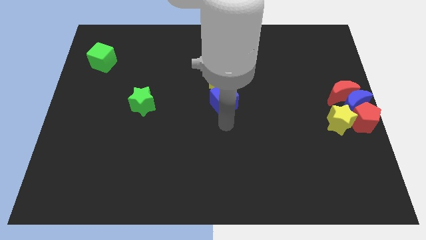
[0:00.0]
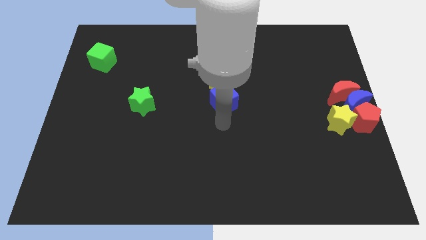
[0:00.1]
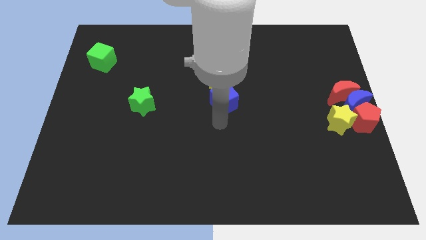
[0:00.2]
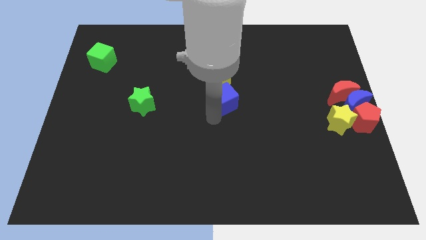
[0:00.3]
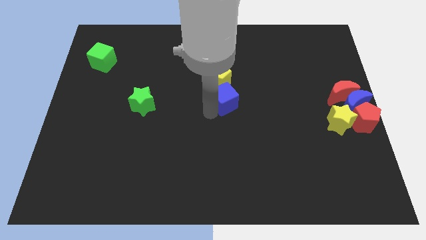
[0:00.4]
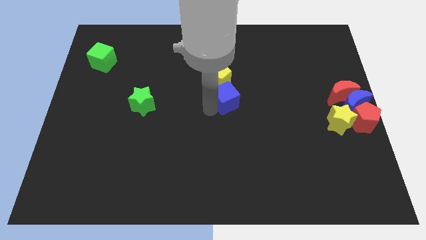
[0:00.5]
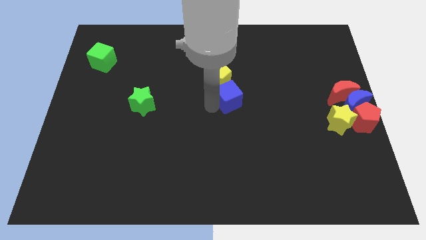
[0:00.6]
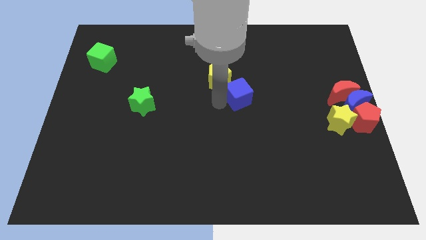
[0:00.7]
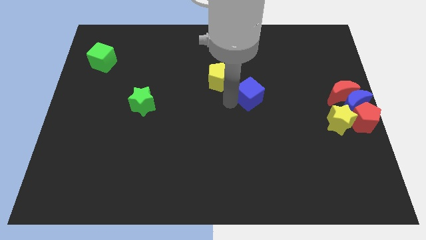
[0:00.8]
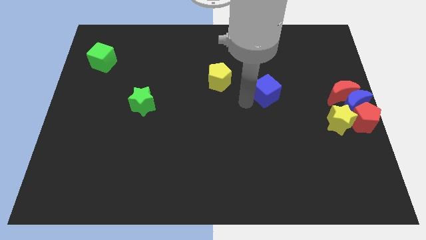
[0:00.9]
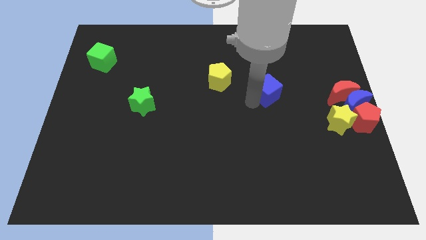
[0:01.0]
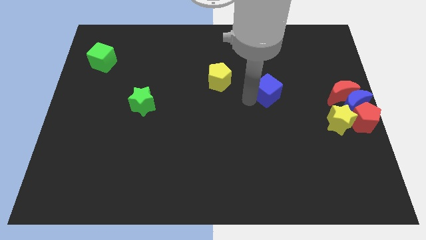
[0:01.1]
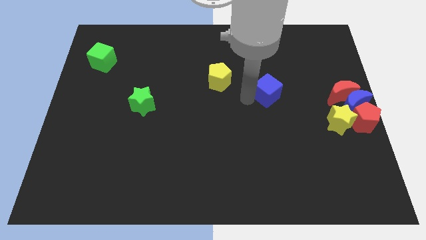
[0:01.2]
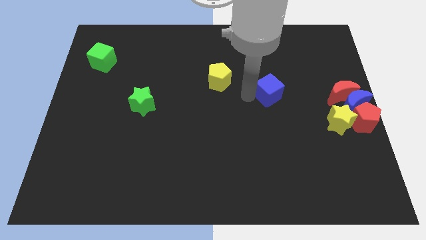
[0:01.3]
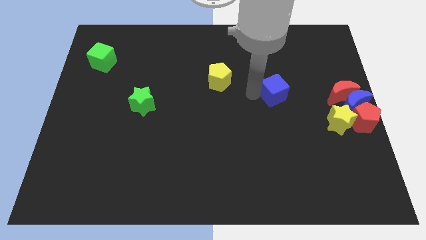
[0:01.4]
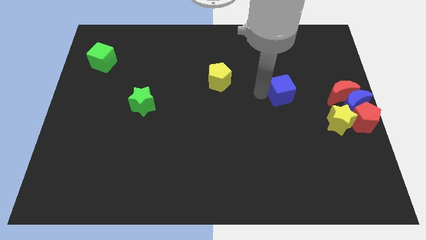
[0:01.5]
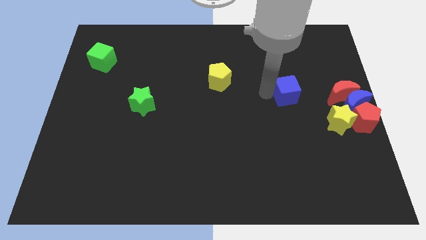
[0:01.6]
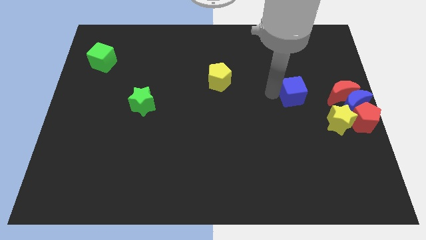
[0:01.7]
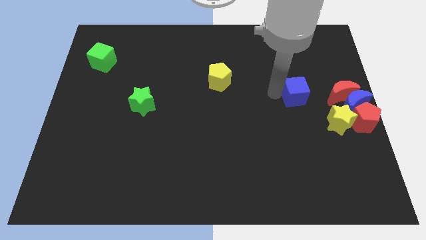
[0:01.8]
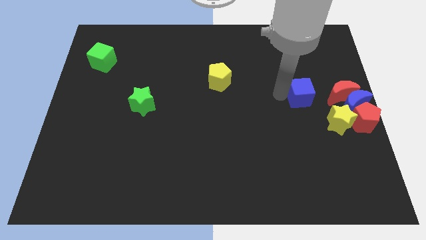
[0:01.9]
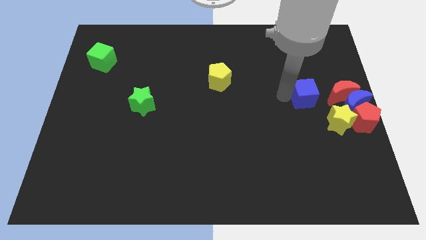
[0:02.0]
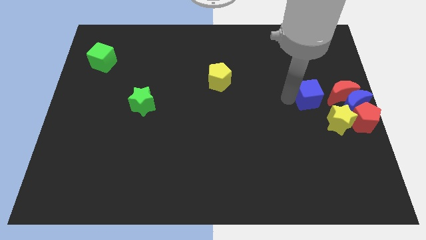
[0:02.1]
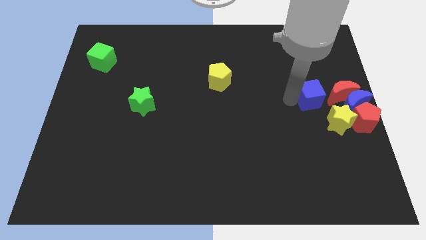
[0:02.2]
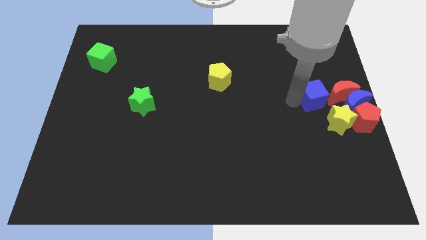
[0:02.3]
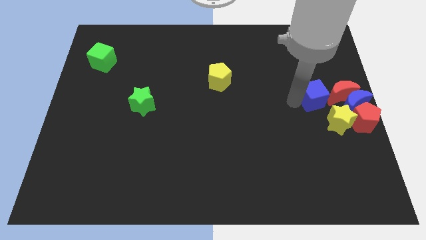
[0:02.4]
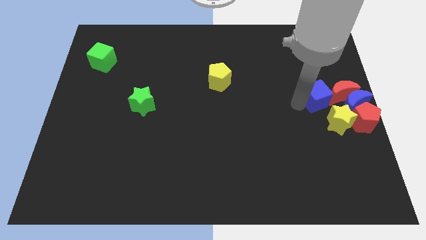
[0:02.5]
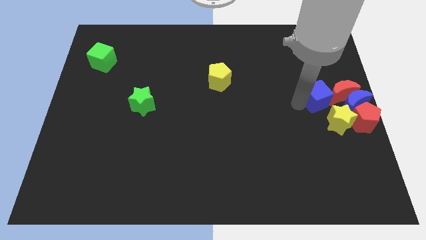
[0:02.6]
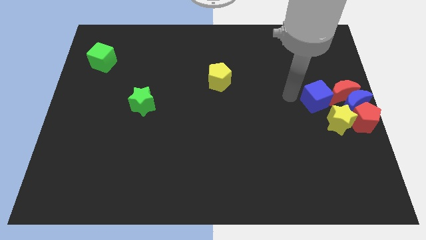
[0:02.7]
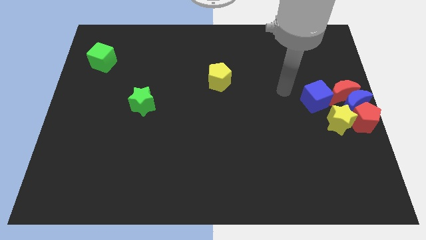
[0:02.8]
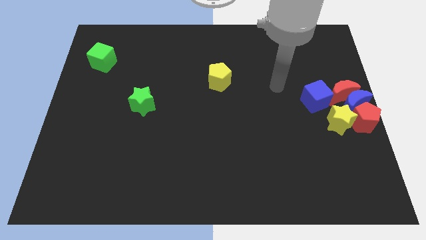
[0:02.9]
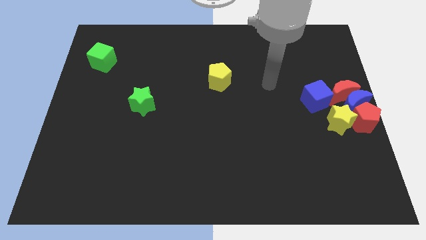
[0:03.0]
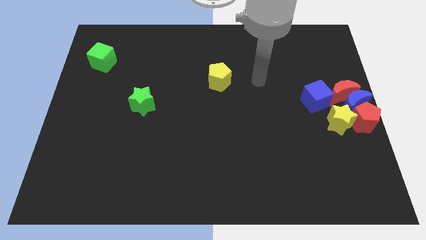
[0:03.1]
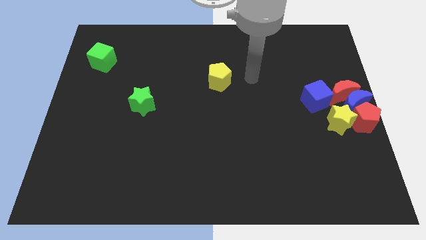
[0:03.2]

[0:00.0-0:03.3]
drag the blue cube into the red moon

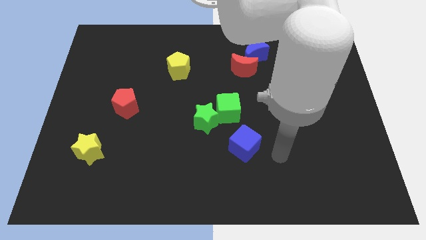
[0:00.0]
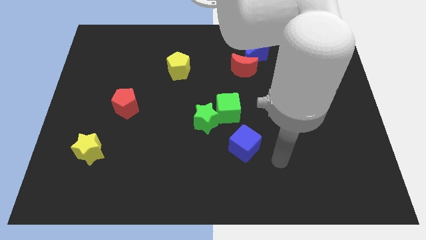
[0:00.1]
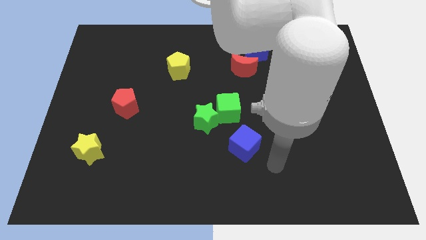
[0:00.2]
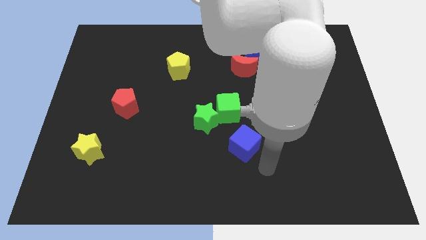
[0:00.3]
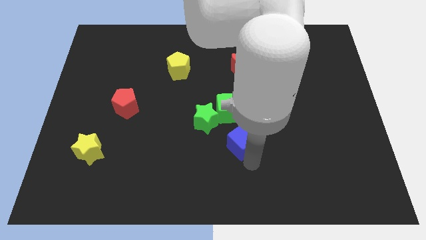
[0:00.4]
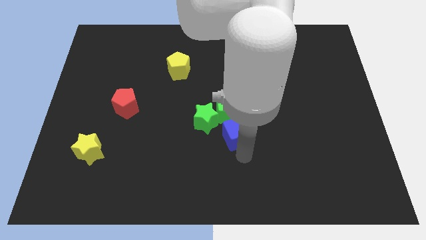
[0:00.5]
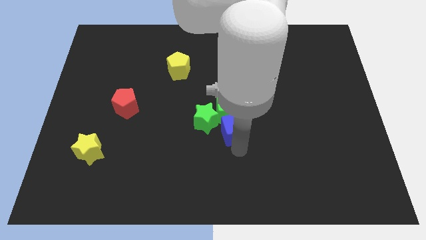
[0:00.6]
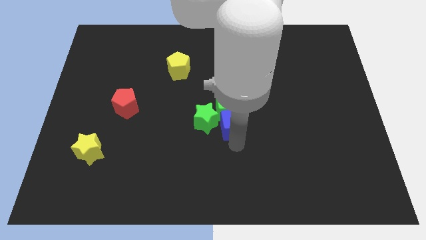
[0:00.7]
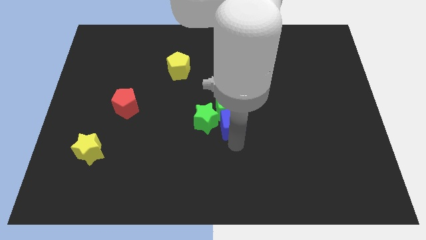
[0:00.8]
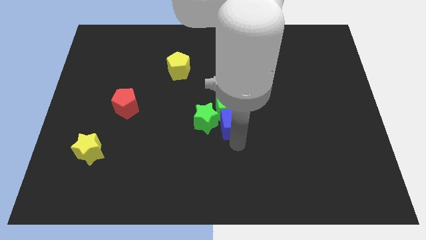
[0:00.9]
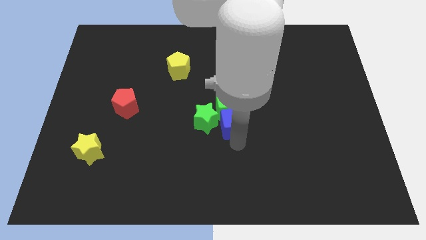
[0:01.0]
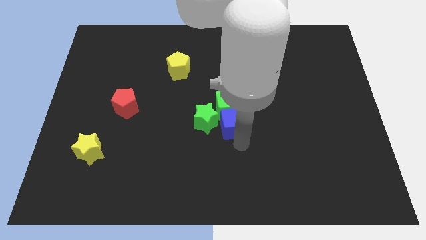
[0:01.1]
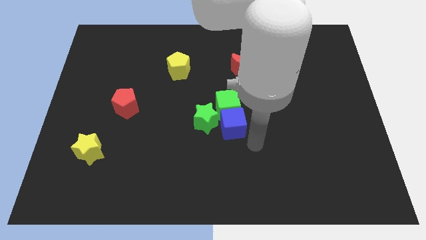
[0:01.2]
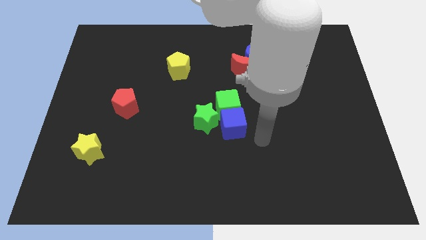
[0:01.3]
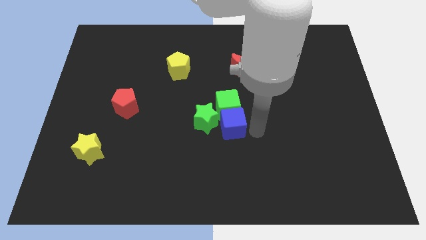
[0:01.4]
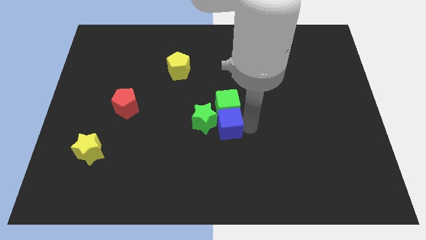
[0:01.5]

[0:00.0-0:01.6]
move the blue cube to the bottom of the green cube

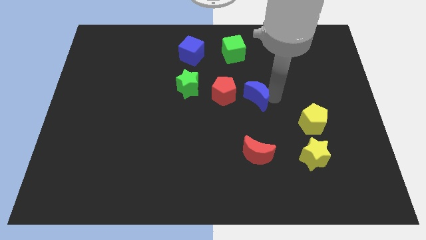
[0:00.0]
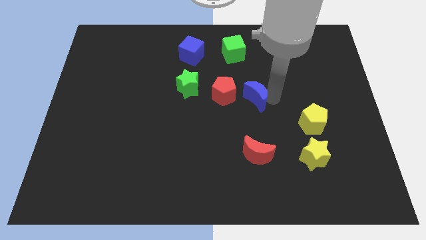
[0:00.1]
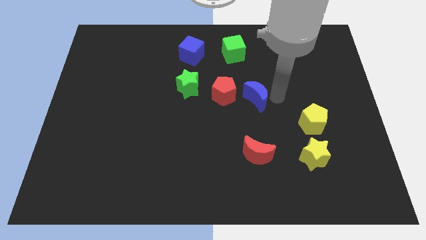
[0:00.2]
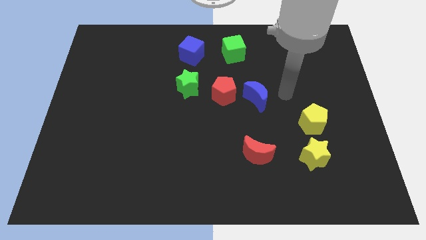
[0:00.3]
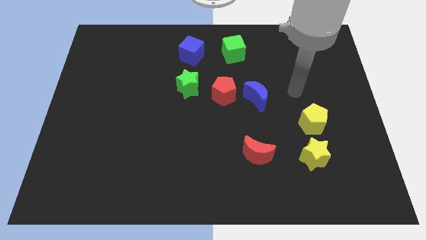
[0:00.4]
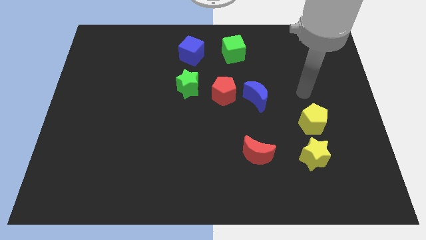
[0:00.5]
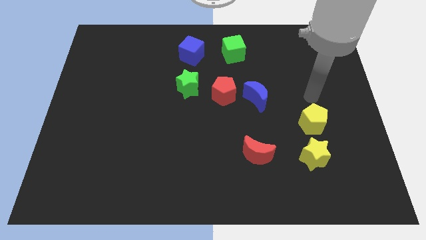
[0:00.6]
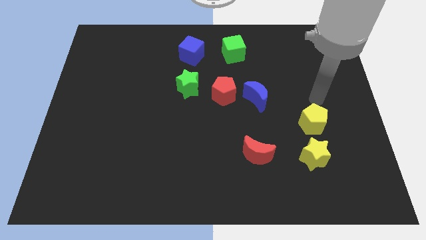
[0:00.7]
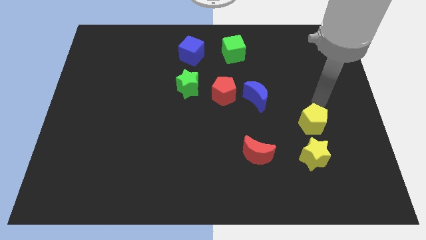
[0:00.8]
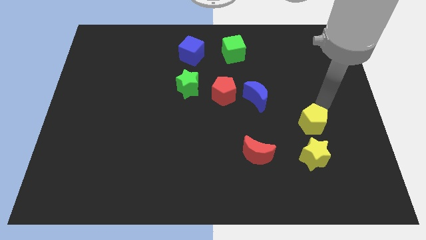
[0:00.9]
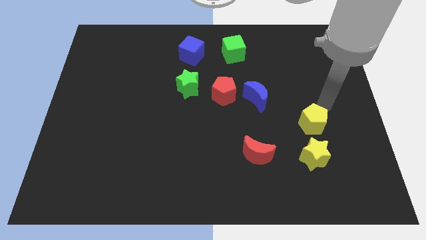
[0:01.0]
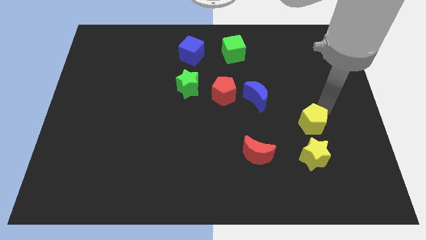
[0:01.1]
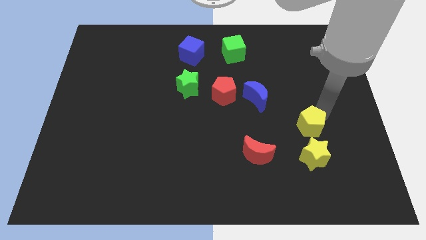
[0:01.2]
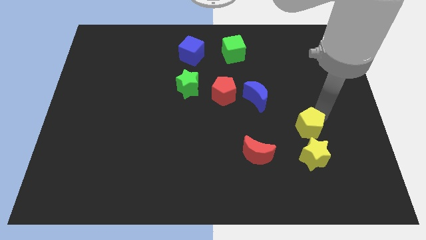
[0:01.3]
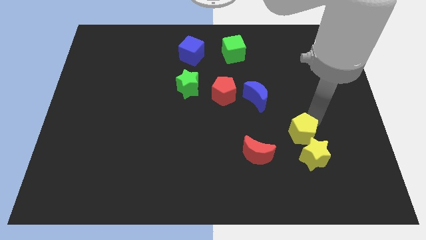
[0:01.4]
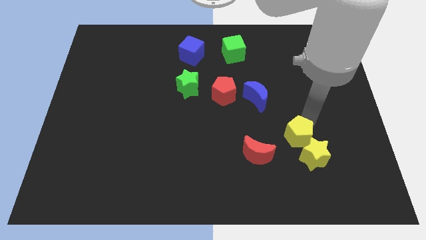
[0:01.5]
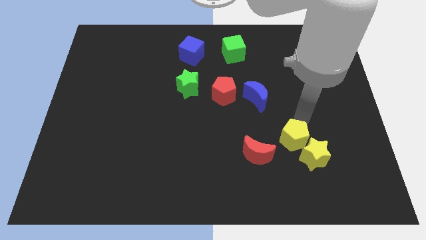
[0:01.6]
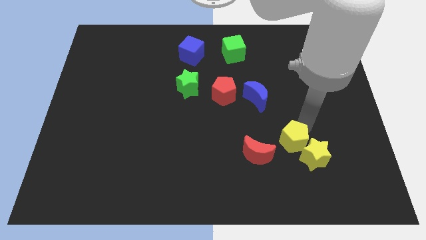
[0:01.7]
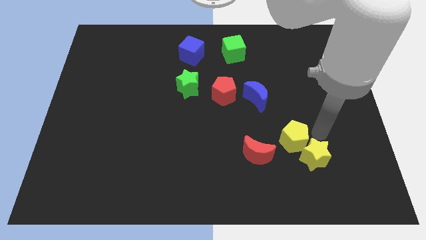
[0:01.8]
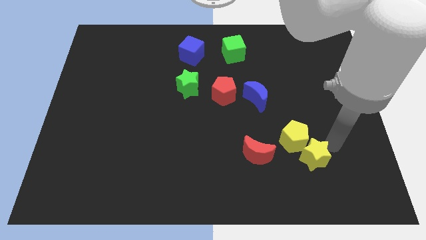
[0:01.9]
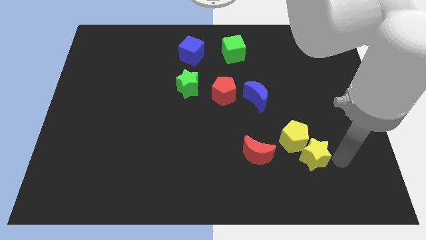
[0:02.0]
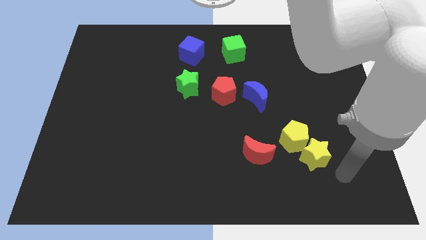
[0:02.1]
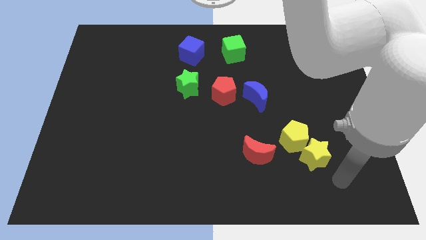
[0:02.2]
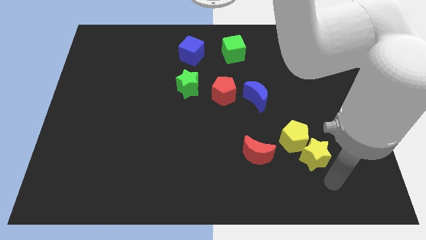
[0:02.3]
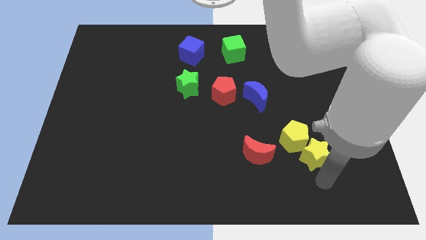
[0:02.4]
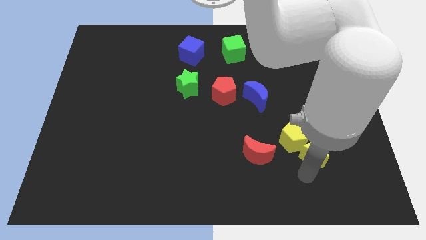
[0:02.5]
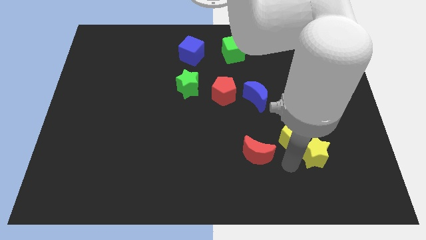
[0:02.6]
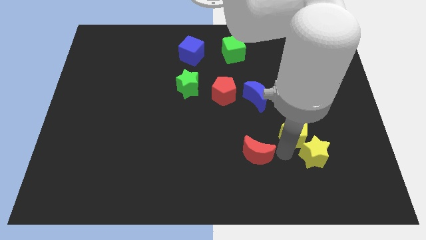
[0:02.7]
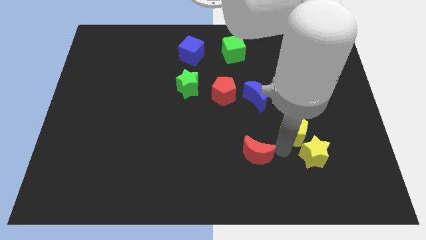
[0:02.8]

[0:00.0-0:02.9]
push the yellow pentagon close to the yellow star

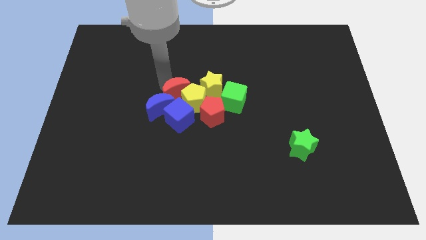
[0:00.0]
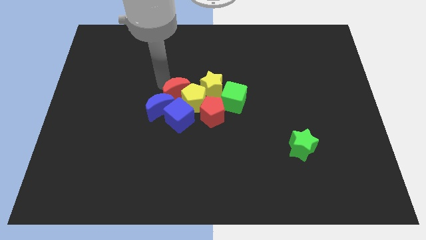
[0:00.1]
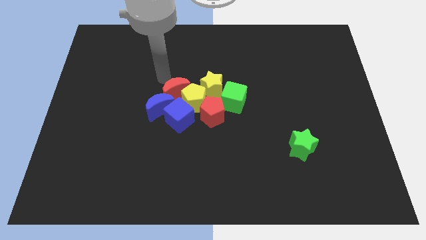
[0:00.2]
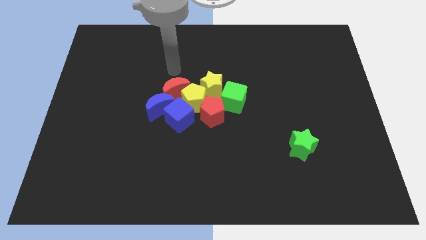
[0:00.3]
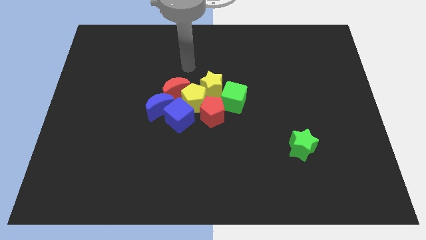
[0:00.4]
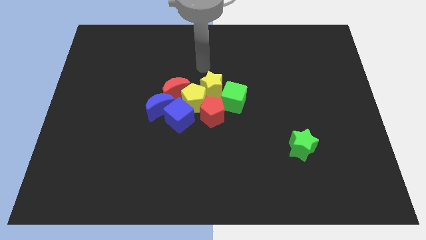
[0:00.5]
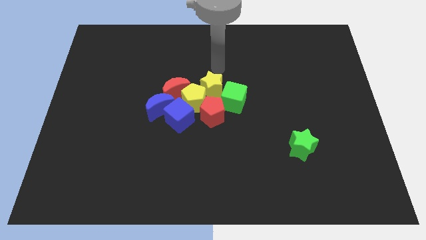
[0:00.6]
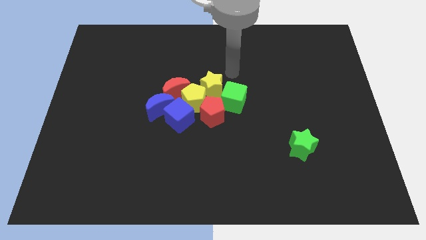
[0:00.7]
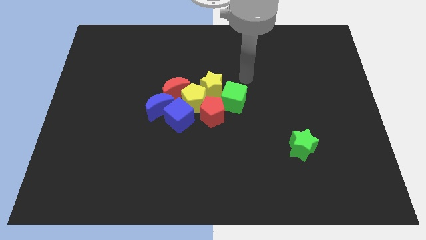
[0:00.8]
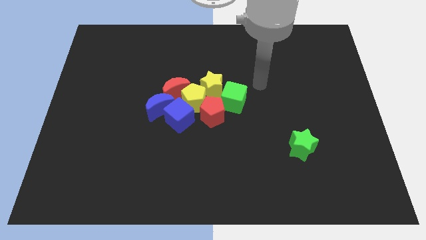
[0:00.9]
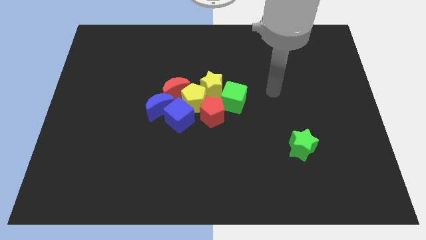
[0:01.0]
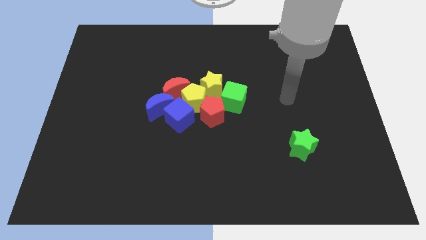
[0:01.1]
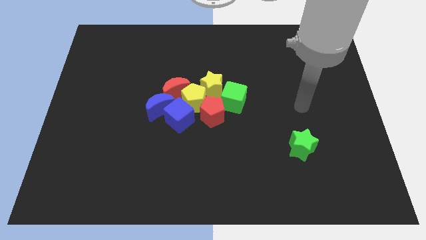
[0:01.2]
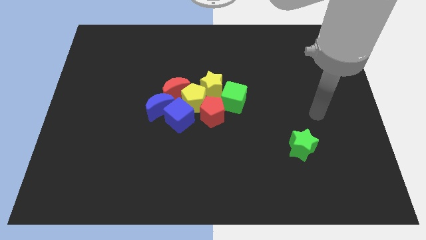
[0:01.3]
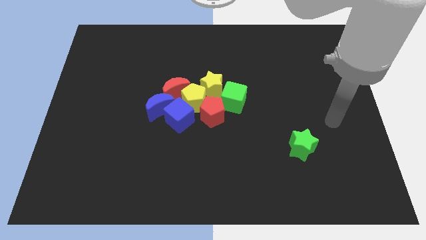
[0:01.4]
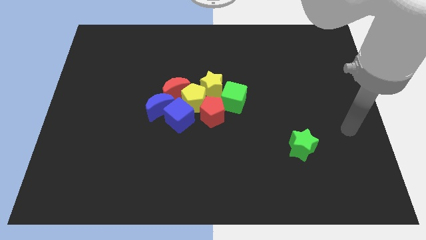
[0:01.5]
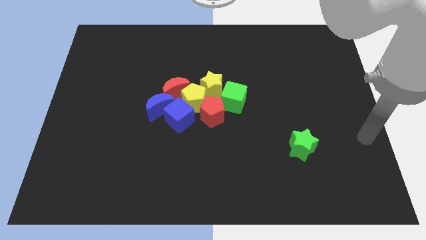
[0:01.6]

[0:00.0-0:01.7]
move the arm towards the green star
